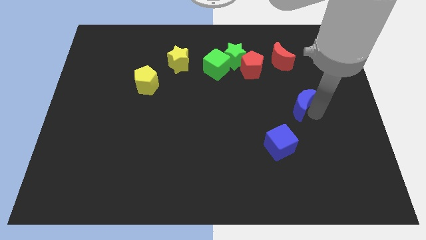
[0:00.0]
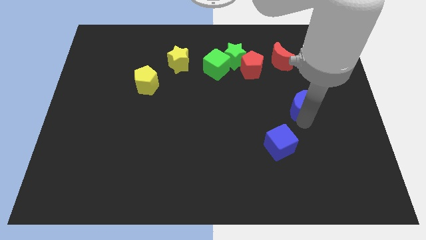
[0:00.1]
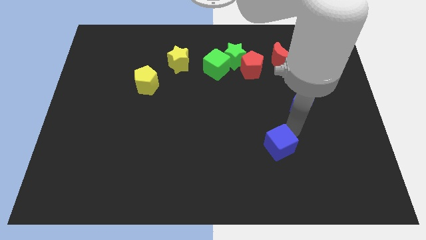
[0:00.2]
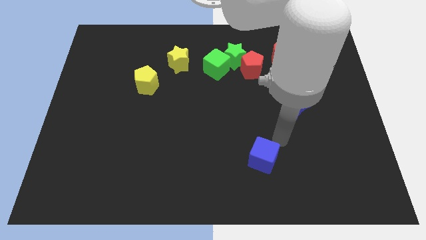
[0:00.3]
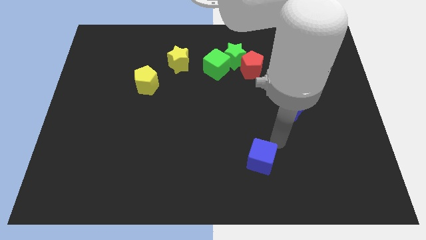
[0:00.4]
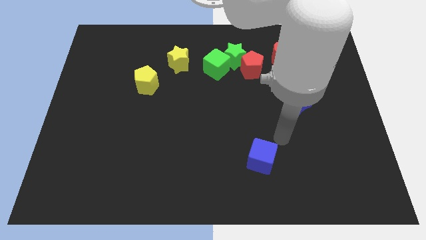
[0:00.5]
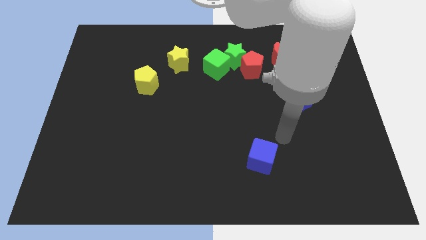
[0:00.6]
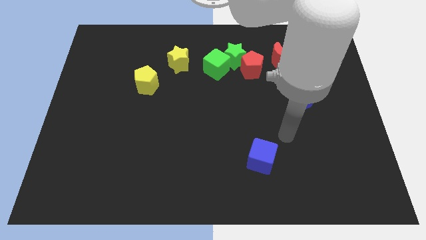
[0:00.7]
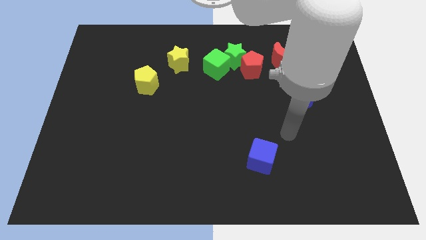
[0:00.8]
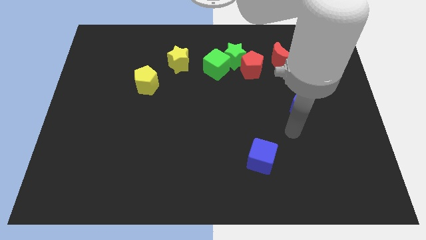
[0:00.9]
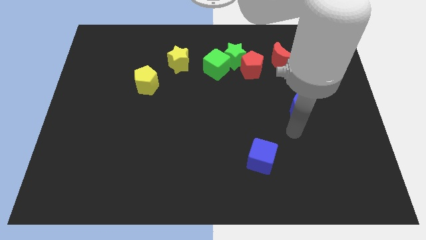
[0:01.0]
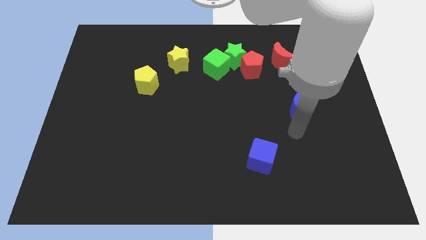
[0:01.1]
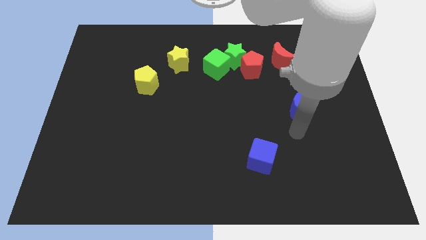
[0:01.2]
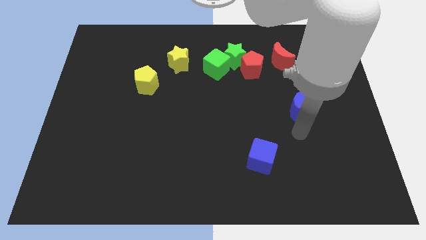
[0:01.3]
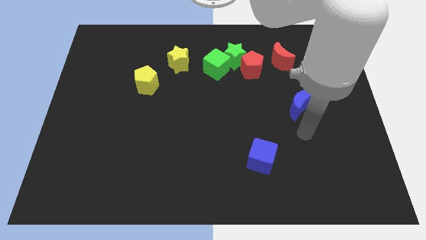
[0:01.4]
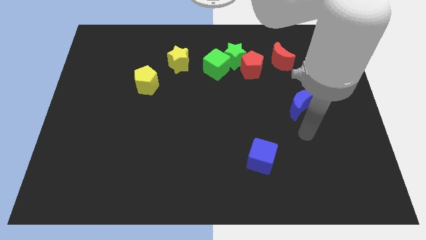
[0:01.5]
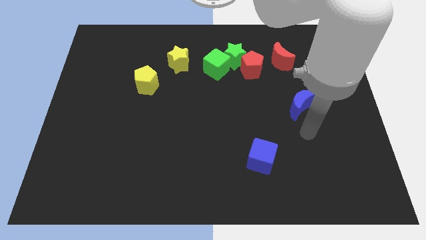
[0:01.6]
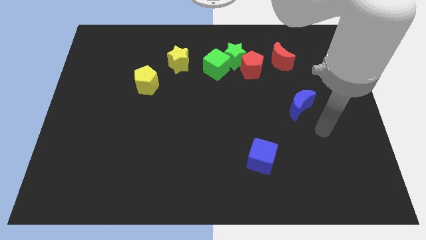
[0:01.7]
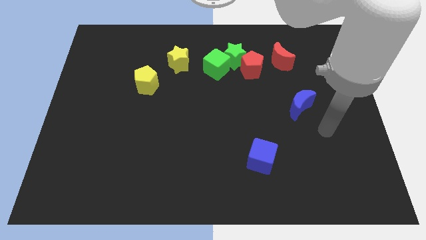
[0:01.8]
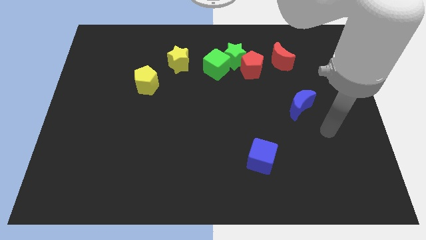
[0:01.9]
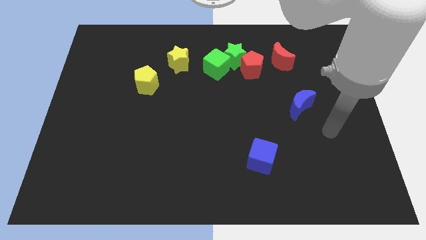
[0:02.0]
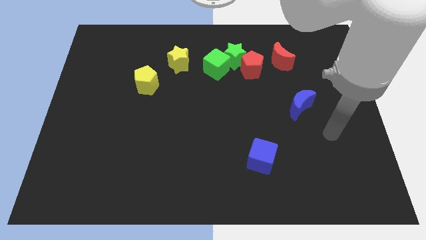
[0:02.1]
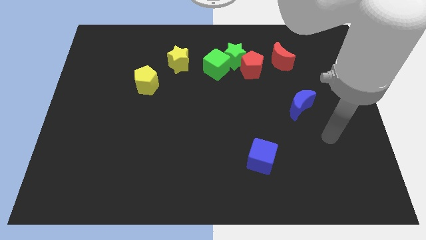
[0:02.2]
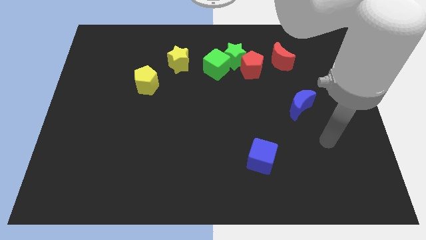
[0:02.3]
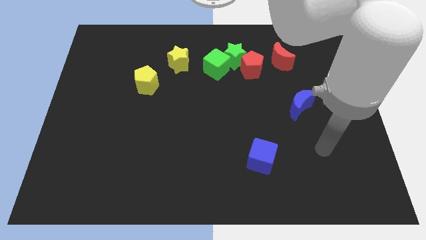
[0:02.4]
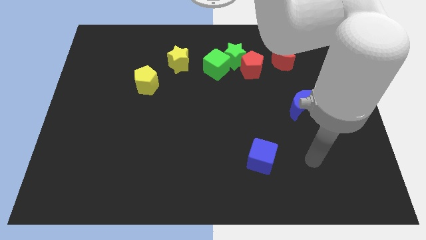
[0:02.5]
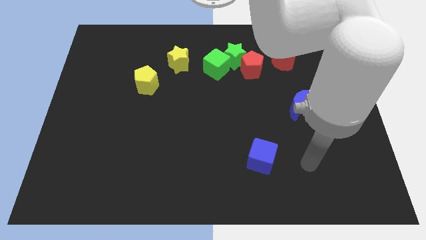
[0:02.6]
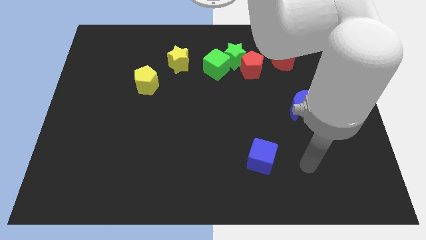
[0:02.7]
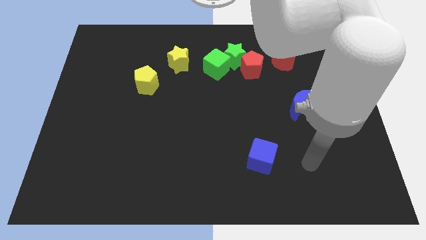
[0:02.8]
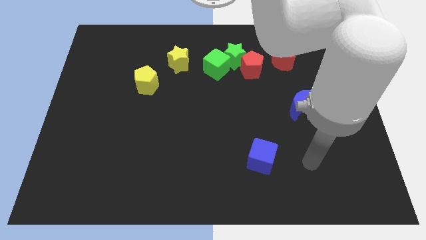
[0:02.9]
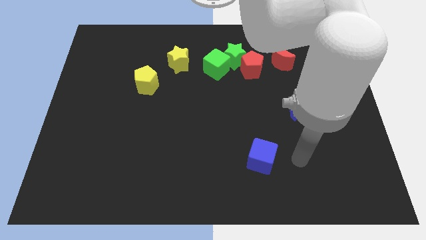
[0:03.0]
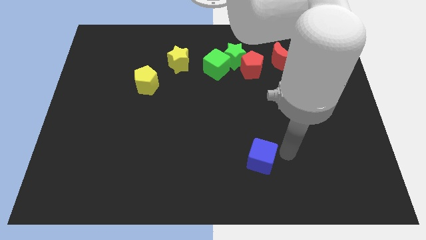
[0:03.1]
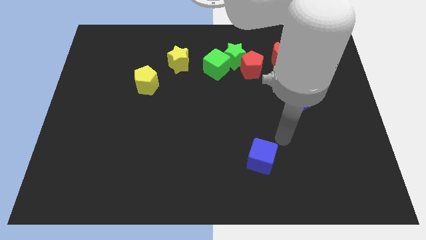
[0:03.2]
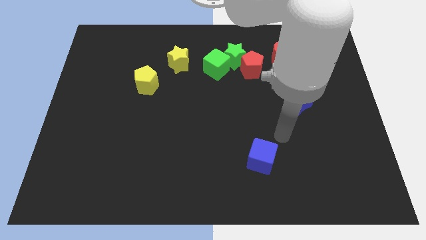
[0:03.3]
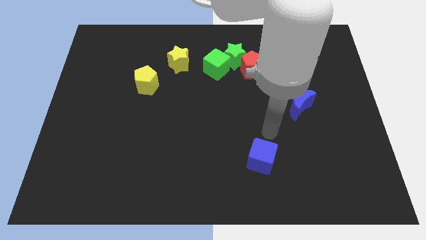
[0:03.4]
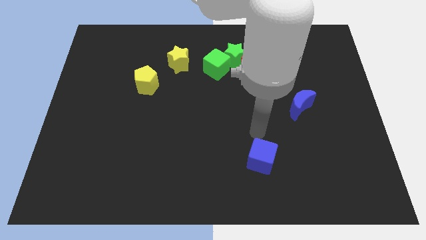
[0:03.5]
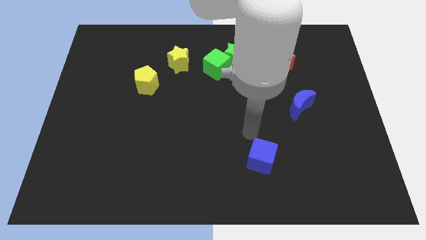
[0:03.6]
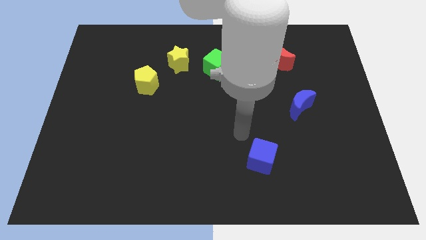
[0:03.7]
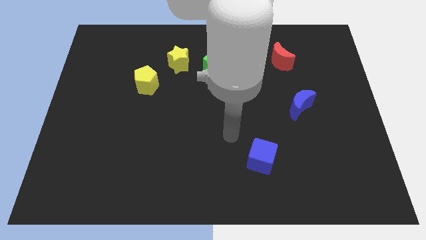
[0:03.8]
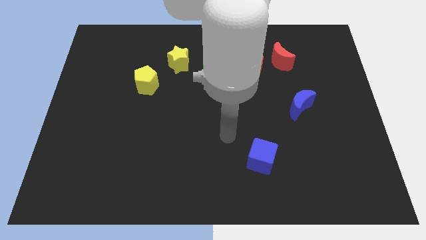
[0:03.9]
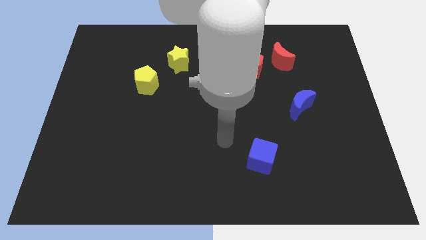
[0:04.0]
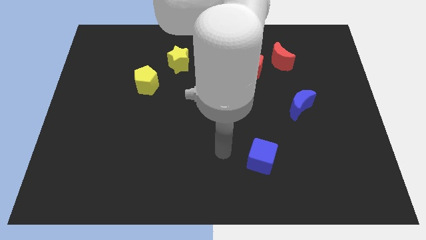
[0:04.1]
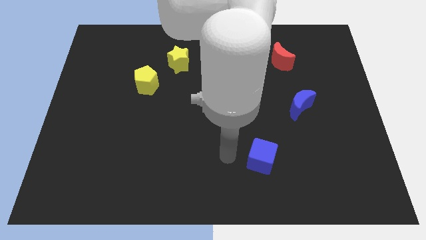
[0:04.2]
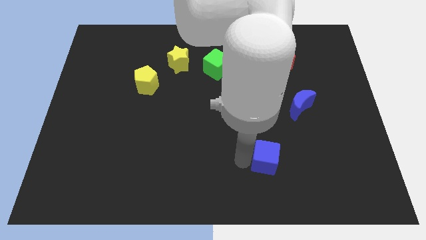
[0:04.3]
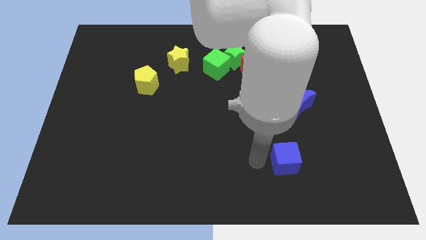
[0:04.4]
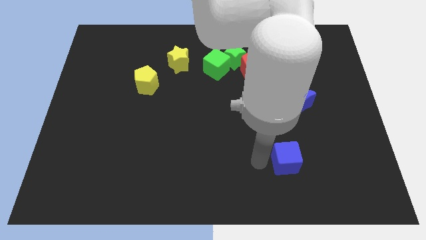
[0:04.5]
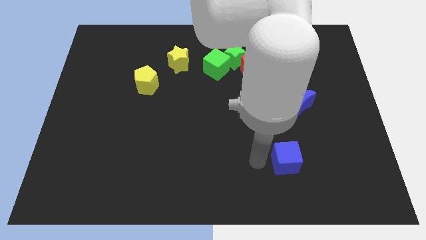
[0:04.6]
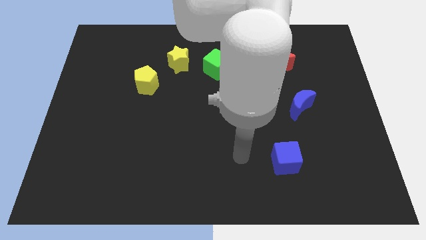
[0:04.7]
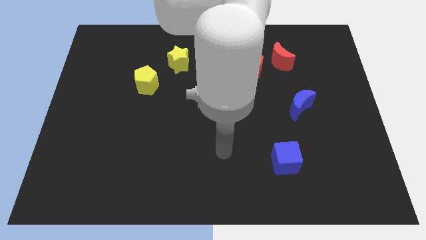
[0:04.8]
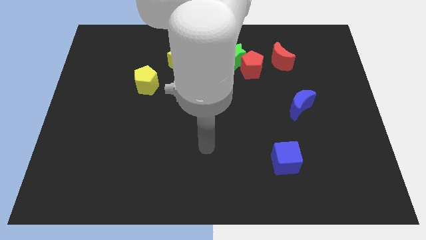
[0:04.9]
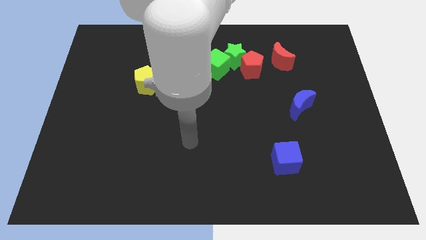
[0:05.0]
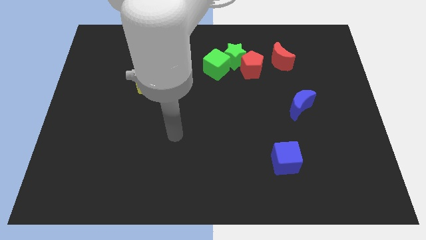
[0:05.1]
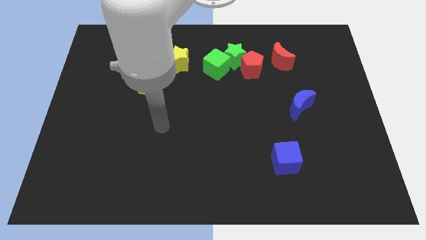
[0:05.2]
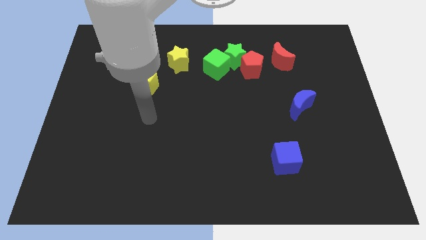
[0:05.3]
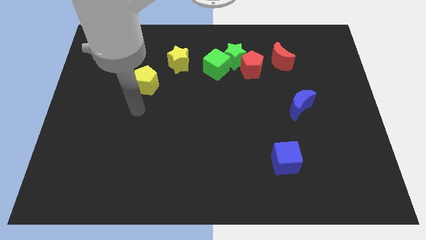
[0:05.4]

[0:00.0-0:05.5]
move the blue cube slightly down

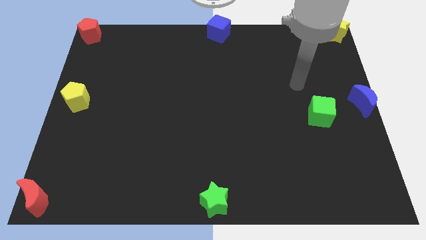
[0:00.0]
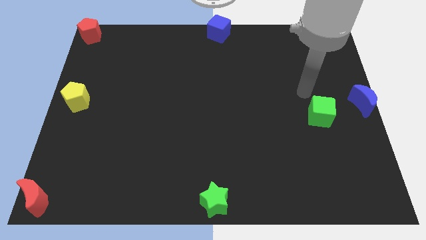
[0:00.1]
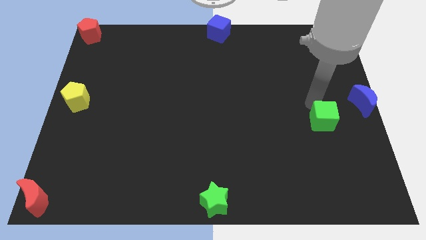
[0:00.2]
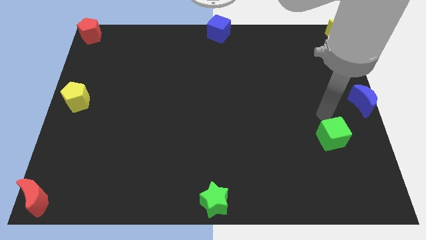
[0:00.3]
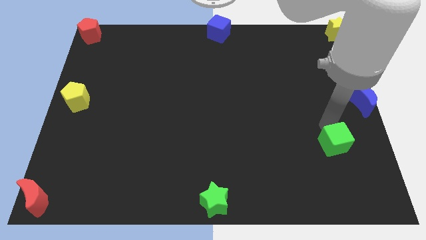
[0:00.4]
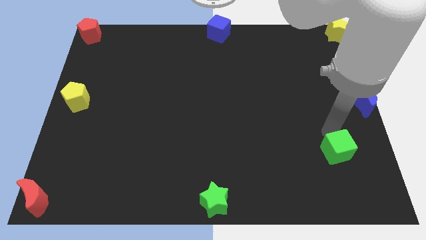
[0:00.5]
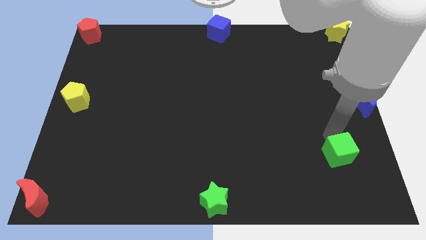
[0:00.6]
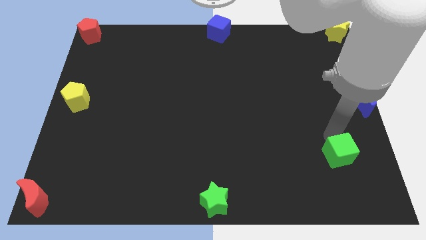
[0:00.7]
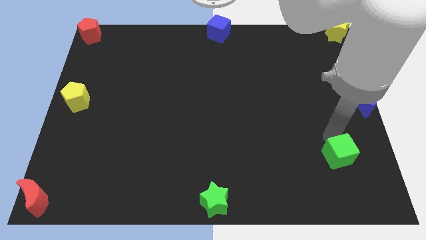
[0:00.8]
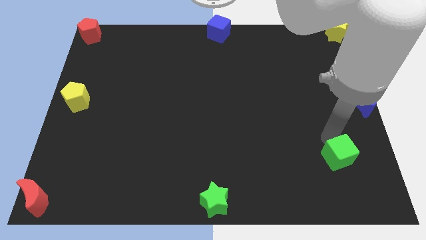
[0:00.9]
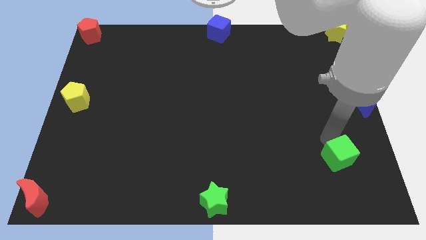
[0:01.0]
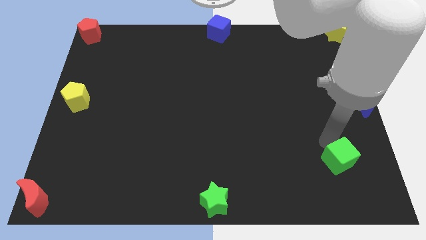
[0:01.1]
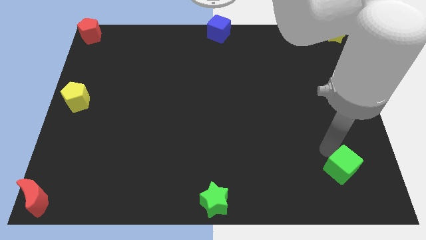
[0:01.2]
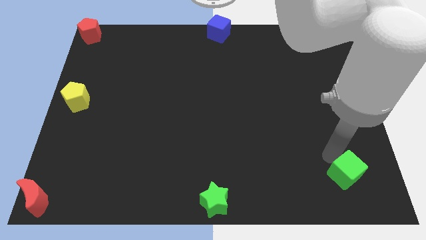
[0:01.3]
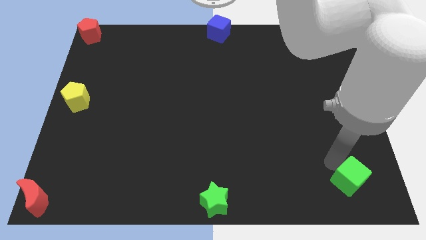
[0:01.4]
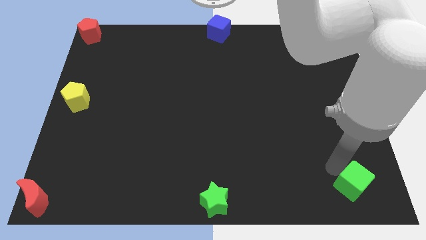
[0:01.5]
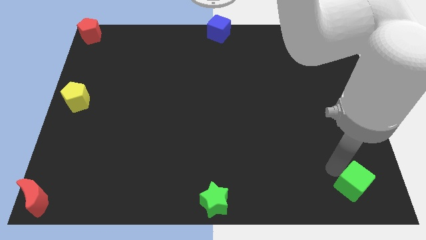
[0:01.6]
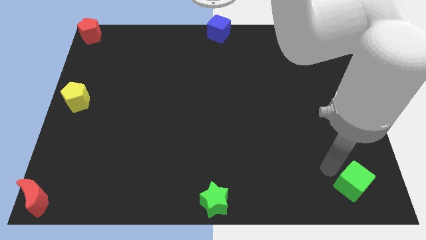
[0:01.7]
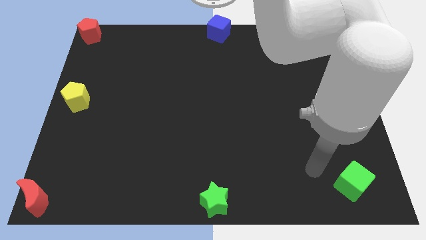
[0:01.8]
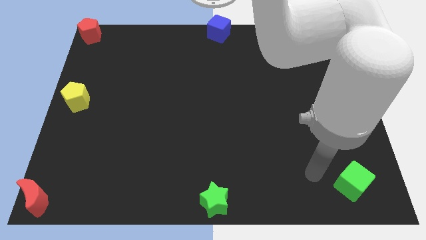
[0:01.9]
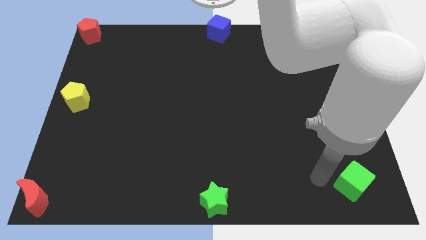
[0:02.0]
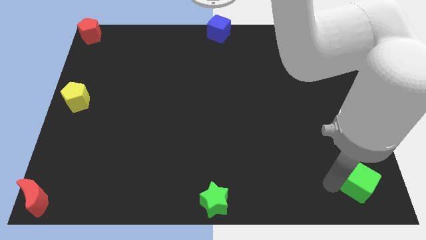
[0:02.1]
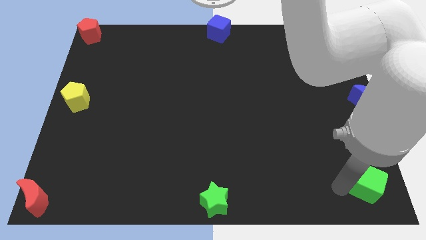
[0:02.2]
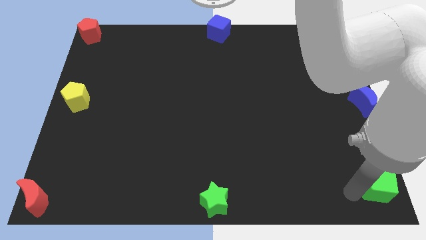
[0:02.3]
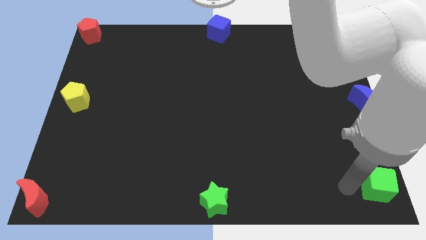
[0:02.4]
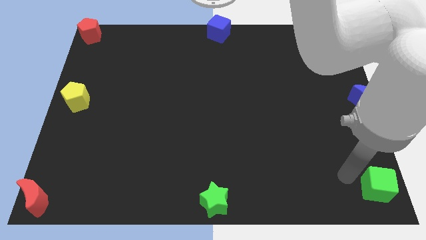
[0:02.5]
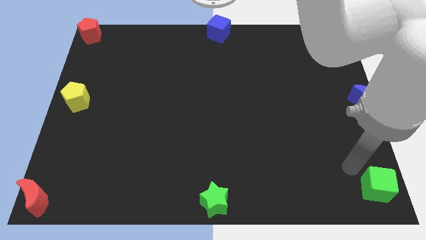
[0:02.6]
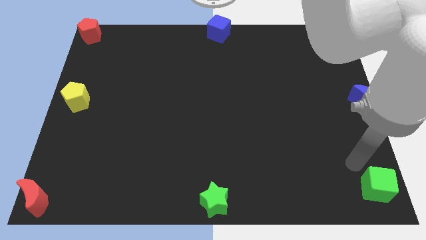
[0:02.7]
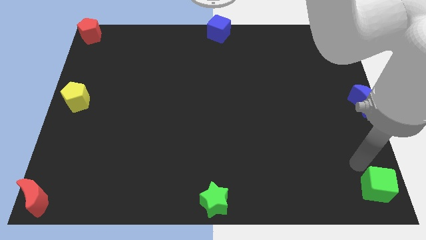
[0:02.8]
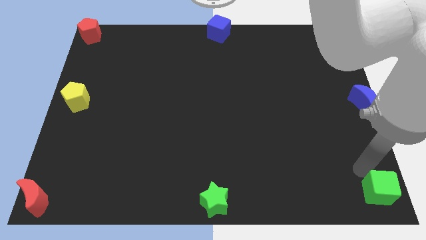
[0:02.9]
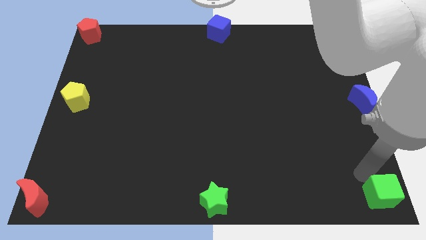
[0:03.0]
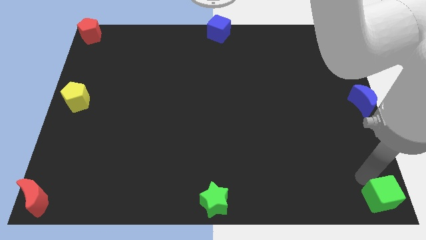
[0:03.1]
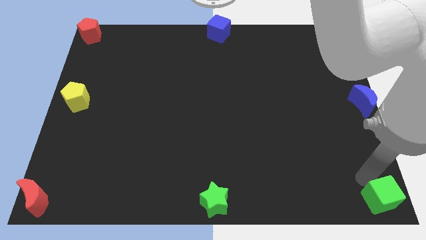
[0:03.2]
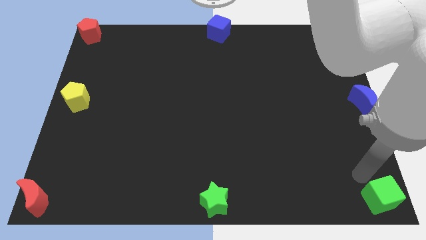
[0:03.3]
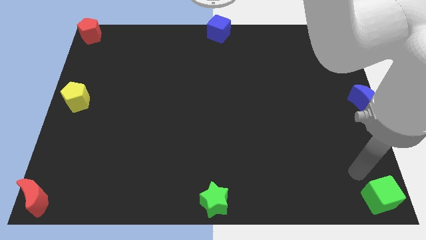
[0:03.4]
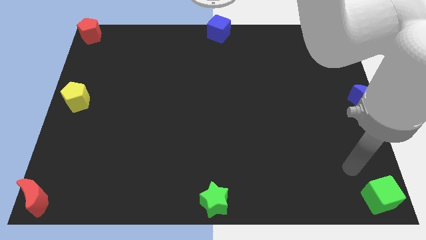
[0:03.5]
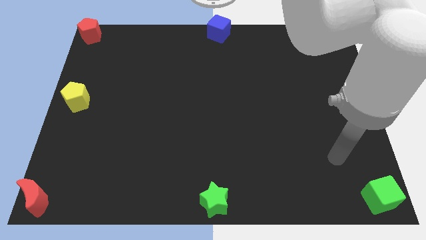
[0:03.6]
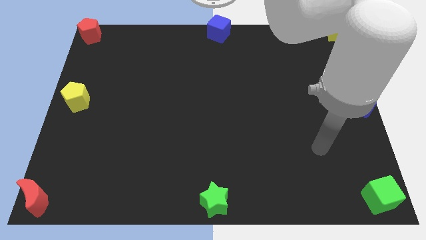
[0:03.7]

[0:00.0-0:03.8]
push the green cube to the bottom right corner
